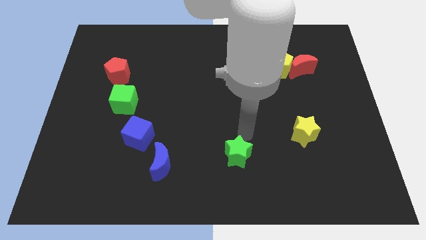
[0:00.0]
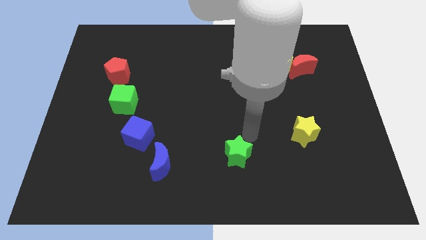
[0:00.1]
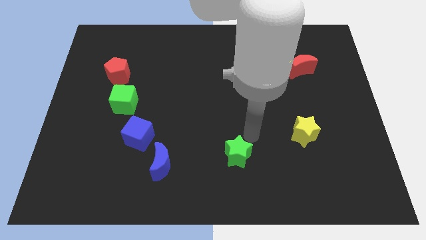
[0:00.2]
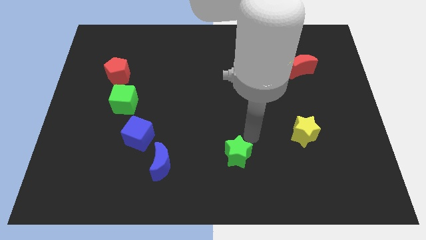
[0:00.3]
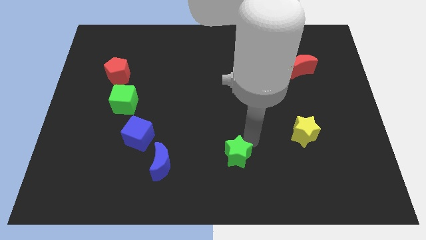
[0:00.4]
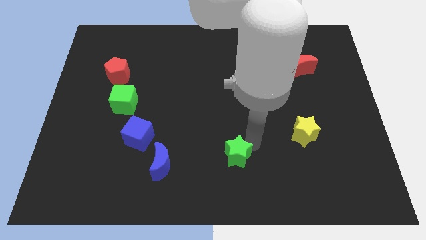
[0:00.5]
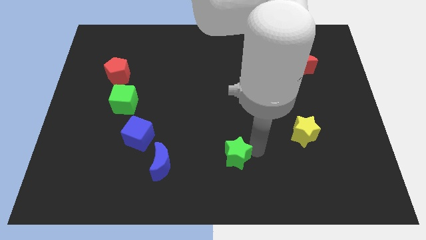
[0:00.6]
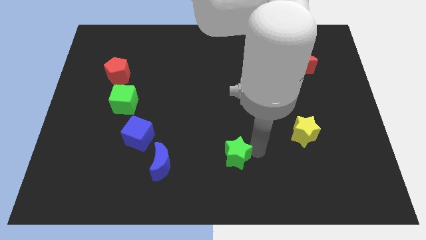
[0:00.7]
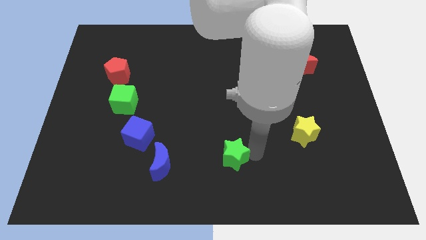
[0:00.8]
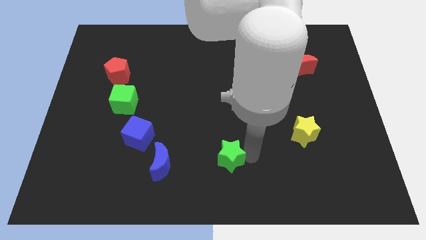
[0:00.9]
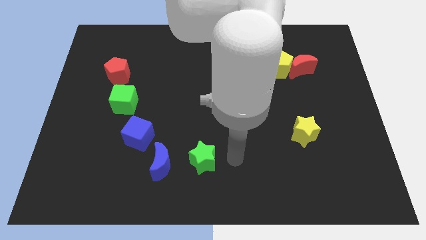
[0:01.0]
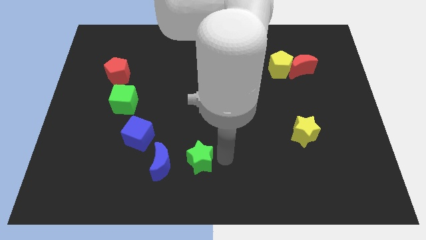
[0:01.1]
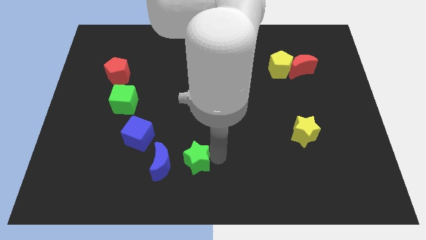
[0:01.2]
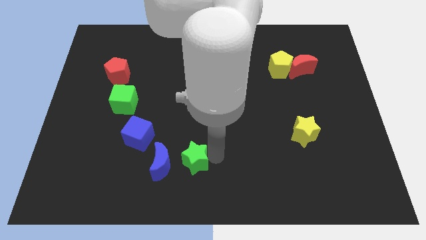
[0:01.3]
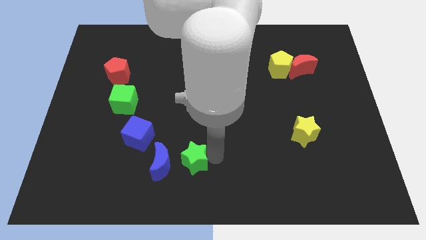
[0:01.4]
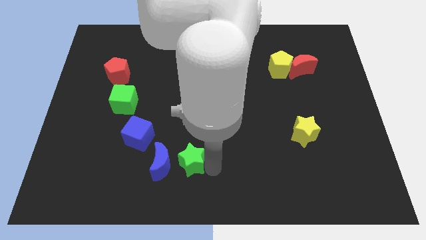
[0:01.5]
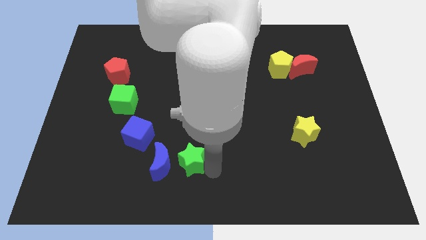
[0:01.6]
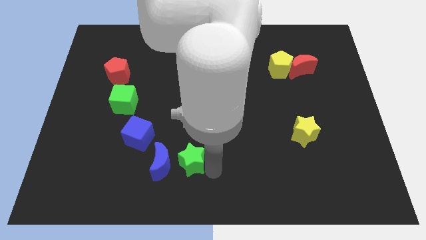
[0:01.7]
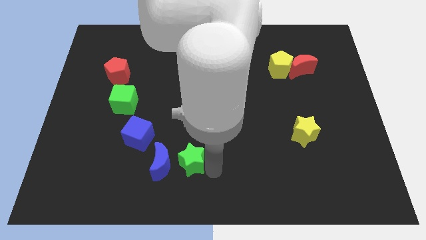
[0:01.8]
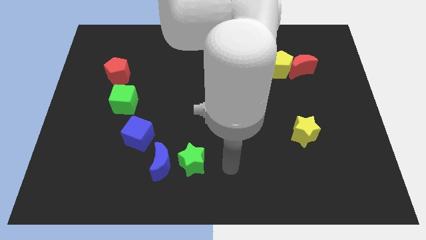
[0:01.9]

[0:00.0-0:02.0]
place green star beside blue crescent

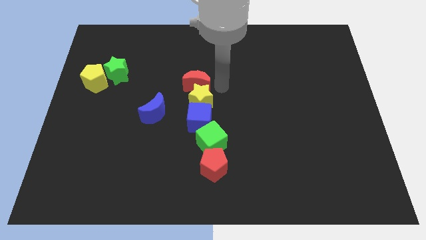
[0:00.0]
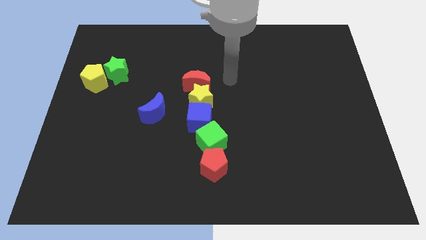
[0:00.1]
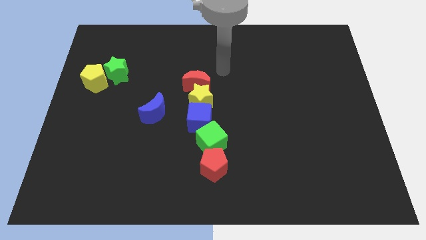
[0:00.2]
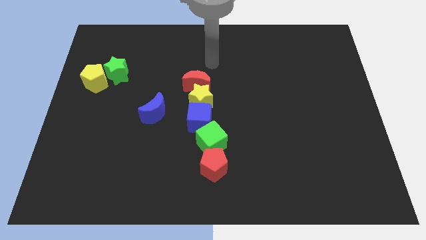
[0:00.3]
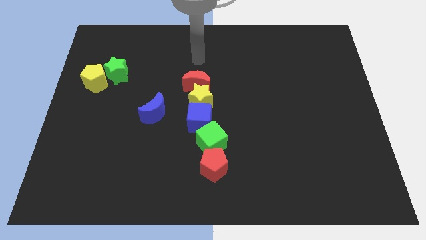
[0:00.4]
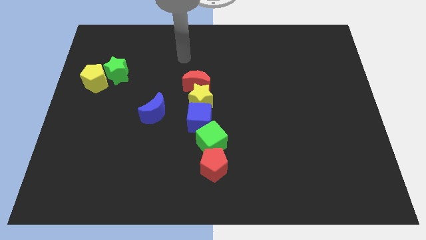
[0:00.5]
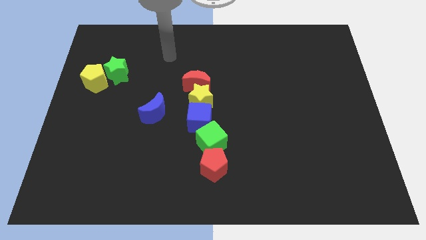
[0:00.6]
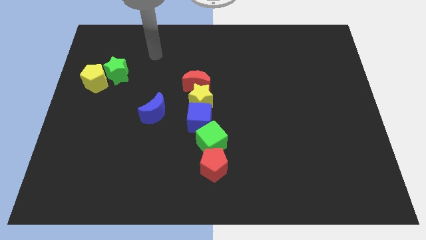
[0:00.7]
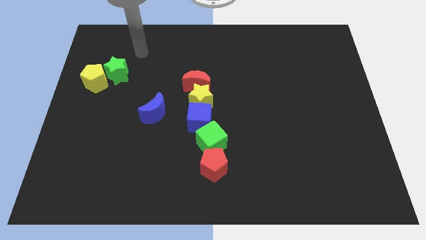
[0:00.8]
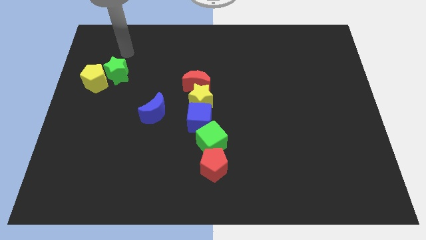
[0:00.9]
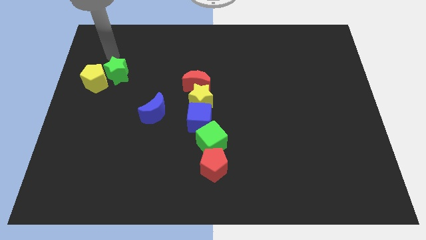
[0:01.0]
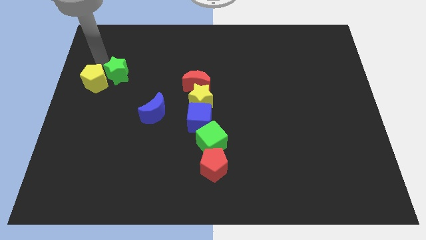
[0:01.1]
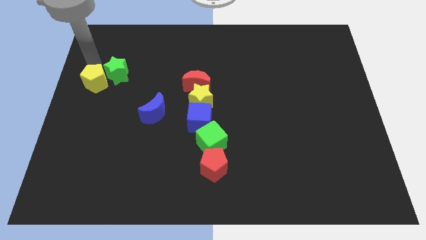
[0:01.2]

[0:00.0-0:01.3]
move your arm to the top of the yellow pentagon

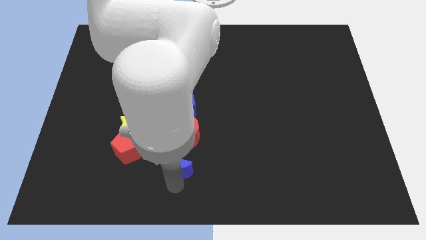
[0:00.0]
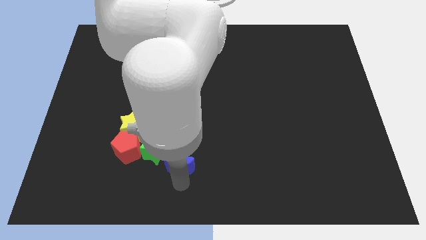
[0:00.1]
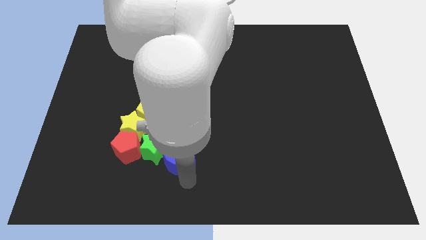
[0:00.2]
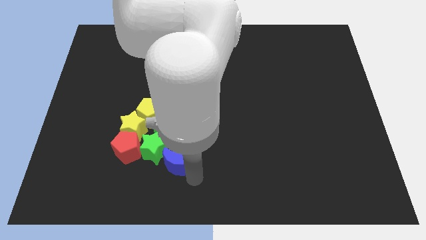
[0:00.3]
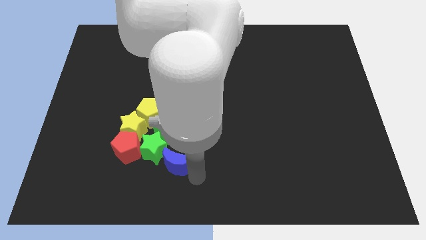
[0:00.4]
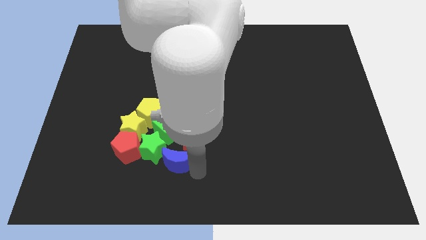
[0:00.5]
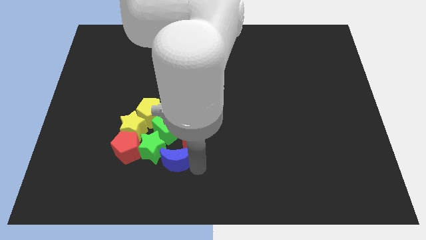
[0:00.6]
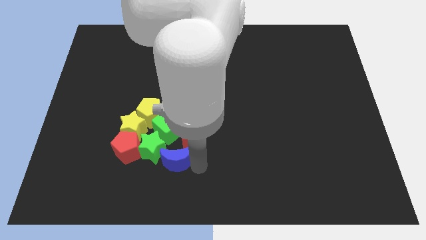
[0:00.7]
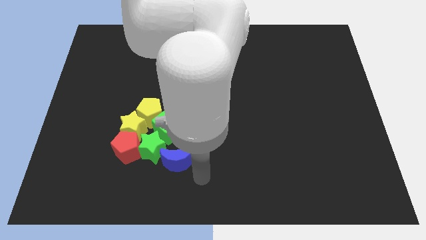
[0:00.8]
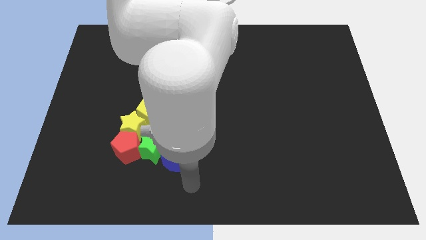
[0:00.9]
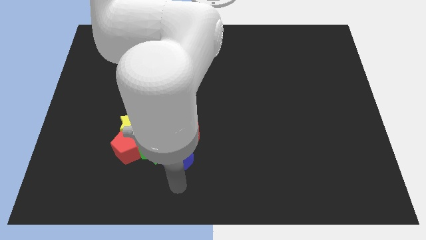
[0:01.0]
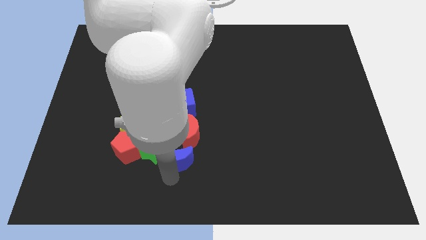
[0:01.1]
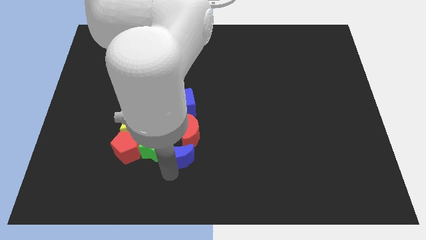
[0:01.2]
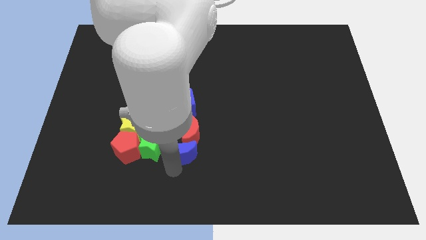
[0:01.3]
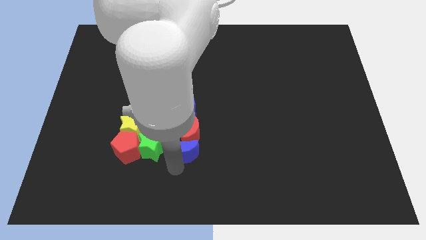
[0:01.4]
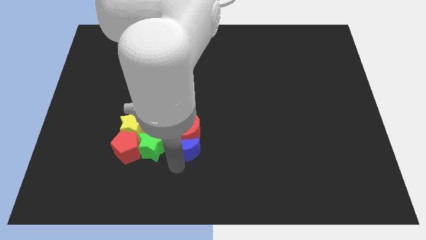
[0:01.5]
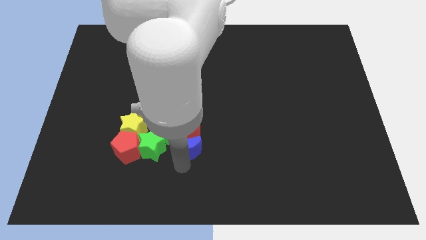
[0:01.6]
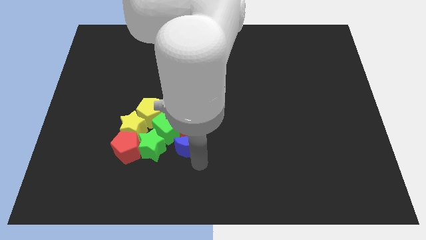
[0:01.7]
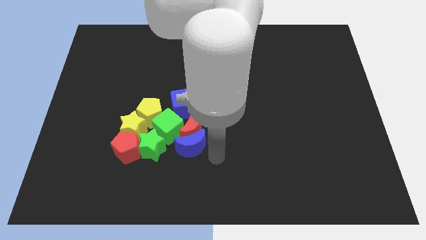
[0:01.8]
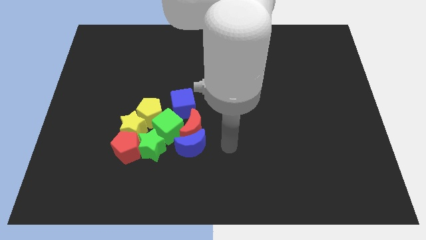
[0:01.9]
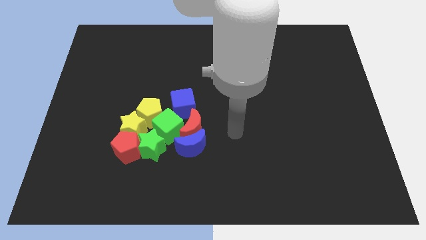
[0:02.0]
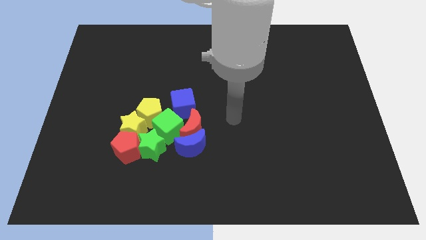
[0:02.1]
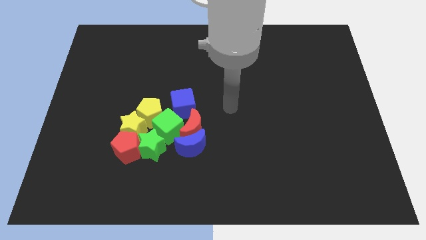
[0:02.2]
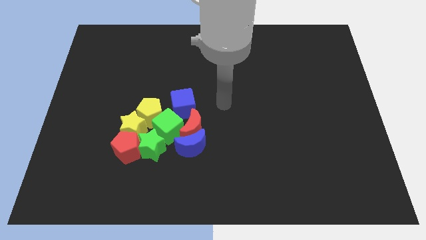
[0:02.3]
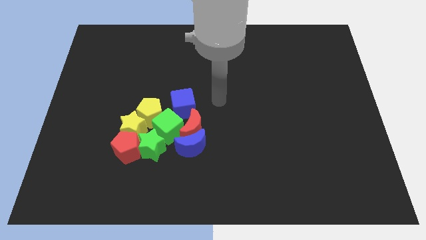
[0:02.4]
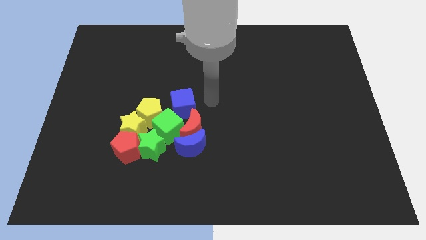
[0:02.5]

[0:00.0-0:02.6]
move blue moon into the group of blocks

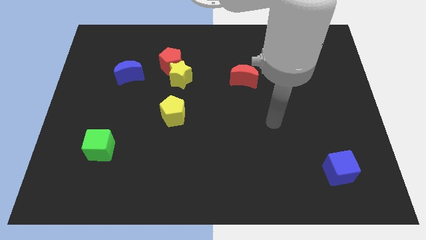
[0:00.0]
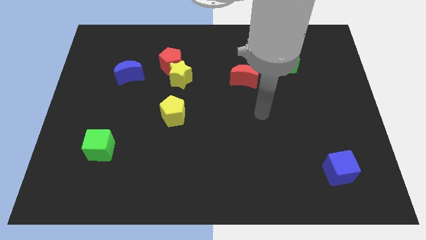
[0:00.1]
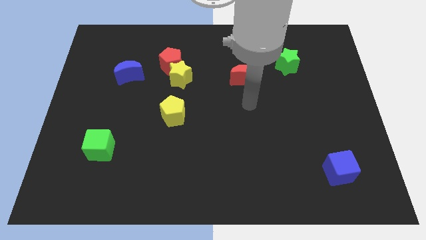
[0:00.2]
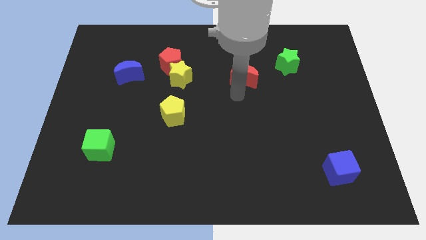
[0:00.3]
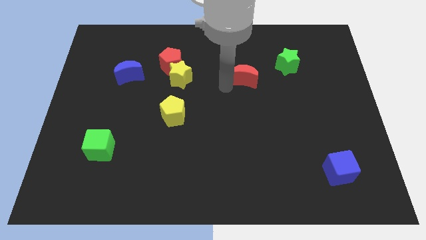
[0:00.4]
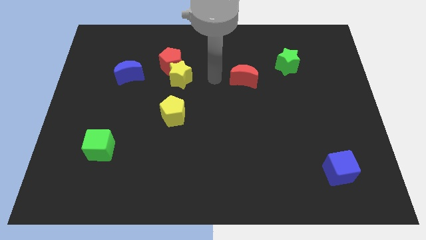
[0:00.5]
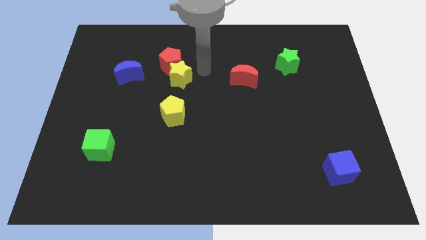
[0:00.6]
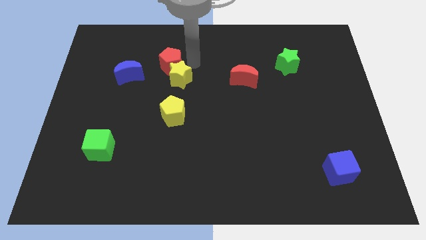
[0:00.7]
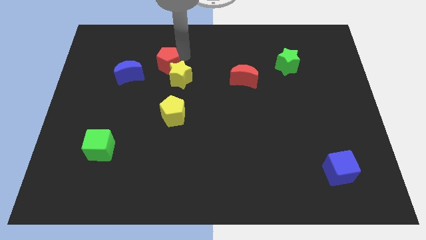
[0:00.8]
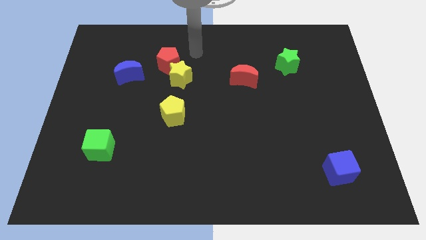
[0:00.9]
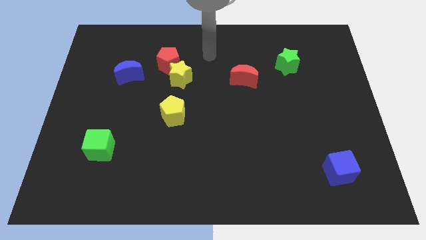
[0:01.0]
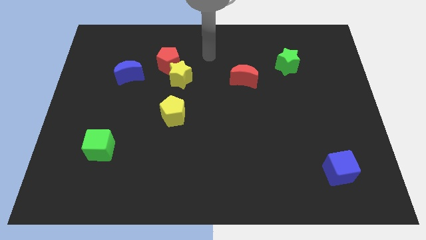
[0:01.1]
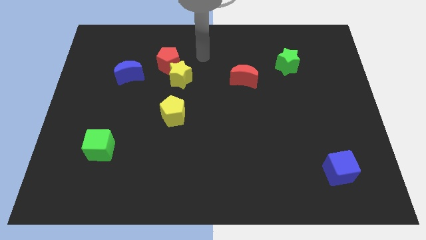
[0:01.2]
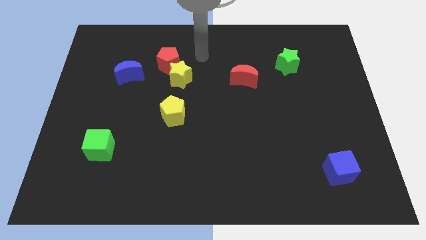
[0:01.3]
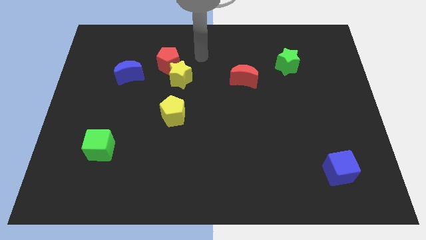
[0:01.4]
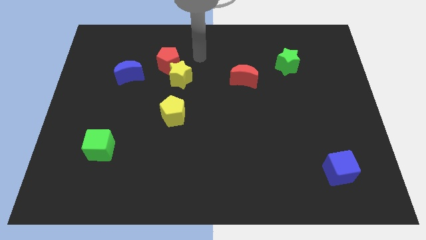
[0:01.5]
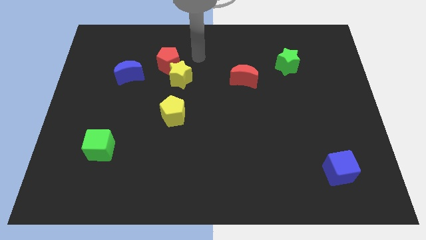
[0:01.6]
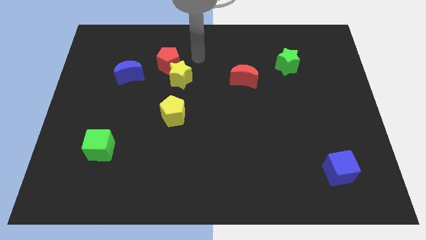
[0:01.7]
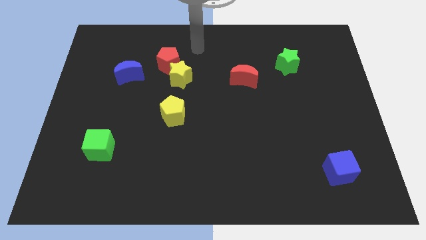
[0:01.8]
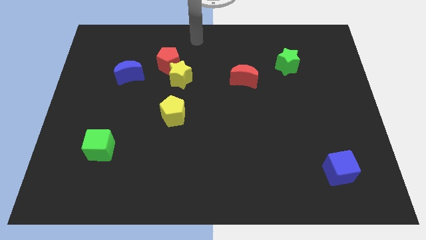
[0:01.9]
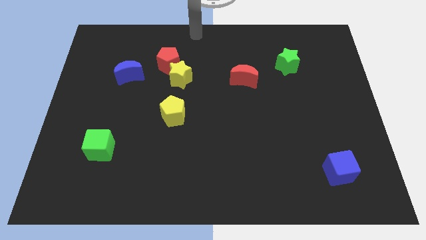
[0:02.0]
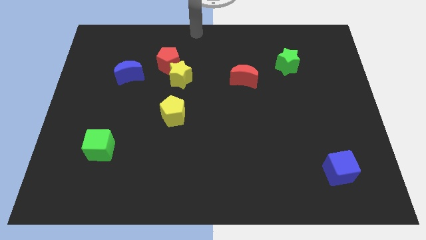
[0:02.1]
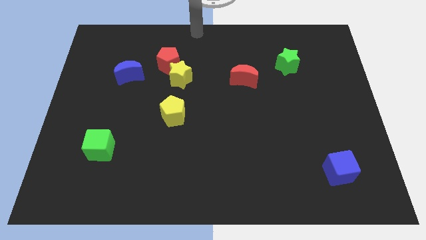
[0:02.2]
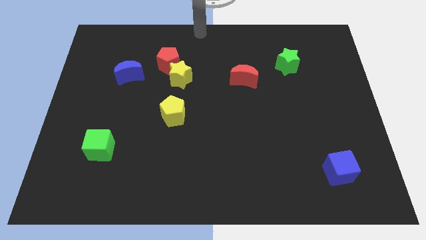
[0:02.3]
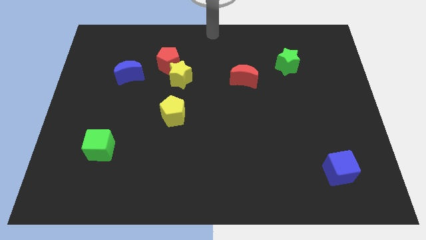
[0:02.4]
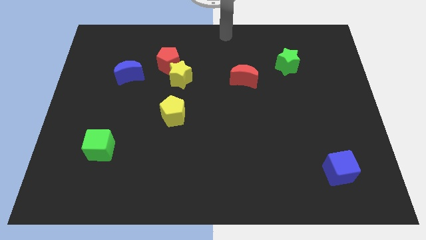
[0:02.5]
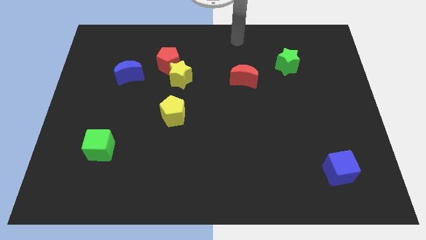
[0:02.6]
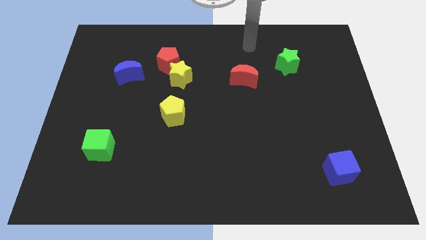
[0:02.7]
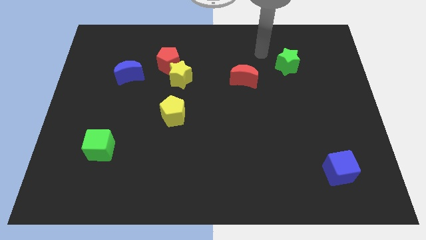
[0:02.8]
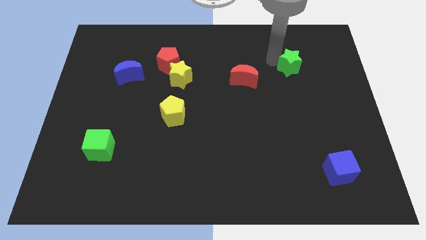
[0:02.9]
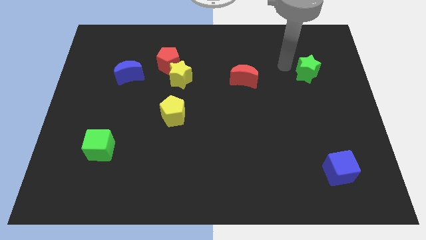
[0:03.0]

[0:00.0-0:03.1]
slightly push the green star to the right side of the table
